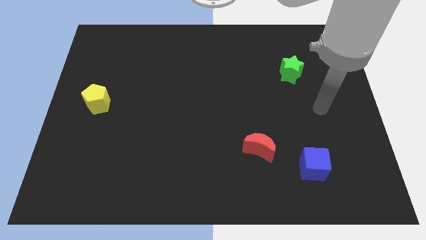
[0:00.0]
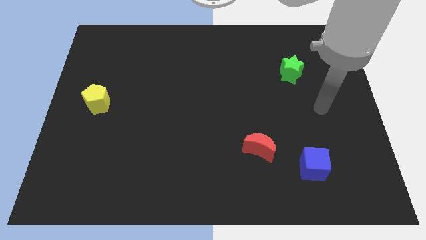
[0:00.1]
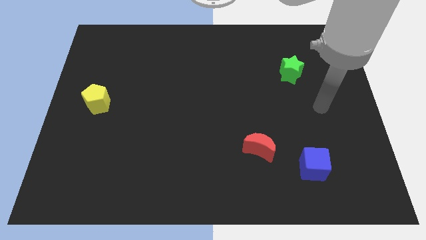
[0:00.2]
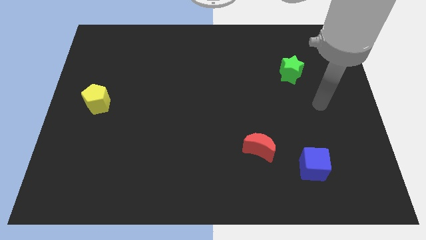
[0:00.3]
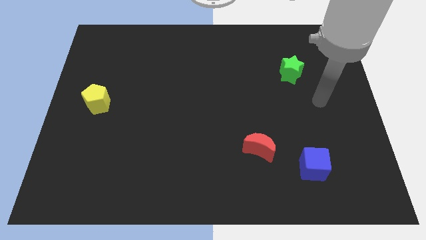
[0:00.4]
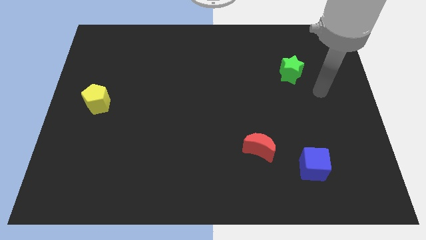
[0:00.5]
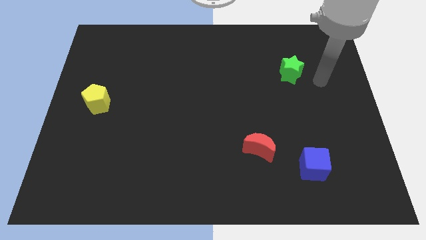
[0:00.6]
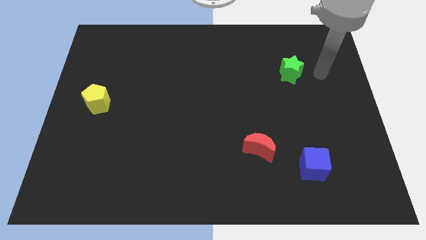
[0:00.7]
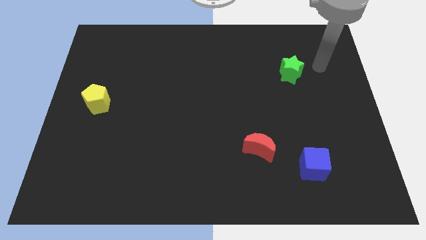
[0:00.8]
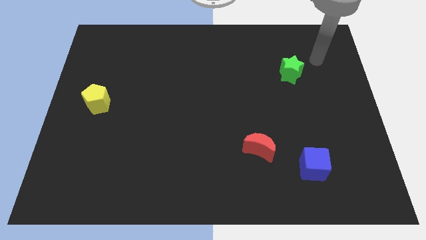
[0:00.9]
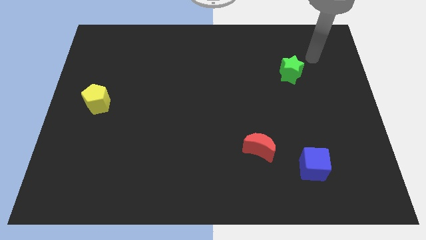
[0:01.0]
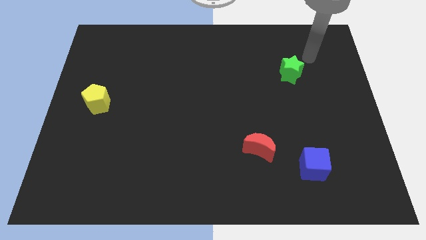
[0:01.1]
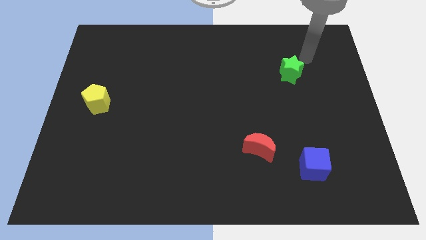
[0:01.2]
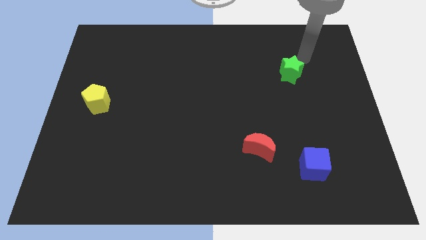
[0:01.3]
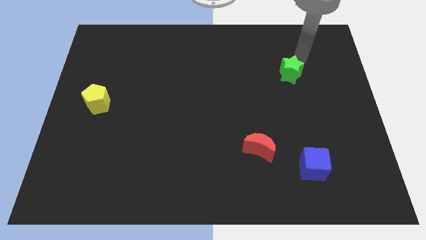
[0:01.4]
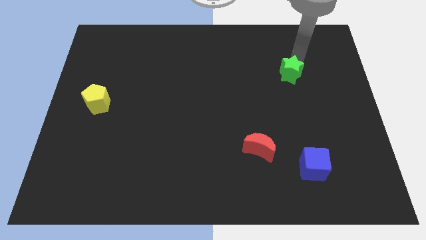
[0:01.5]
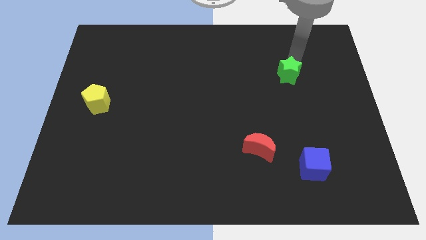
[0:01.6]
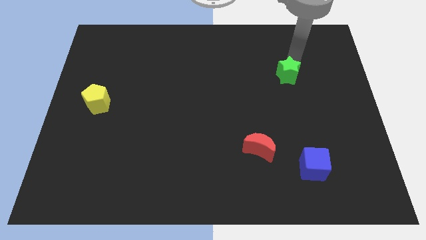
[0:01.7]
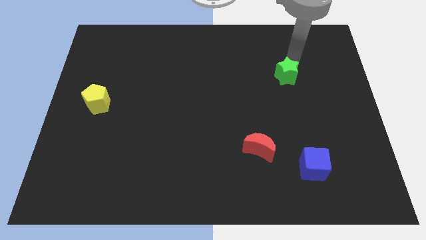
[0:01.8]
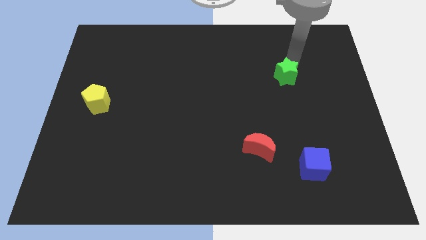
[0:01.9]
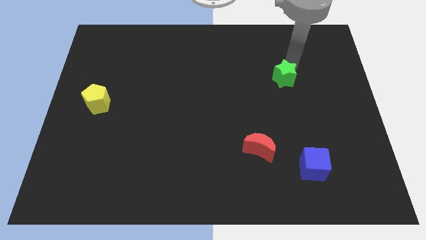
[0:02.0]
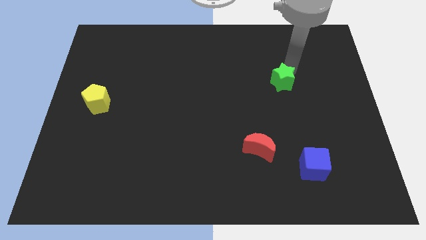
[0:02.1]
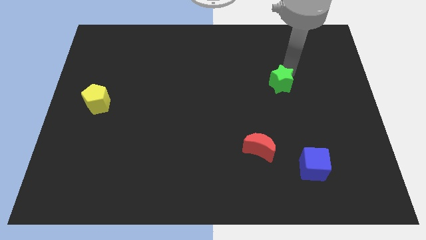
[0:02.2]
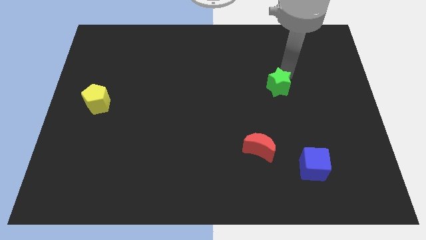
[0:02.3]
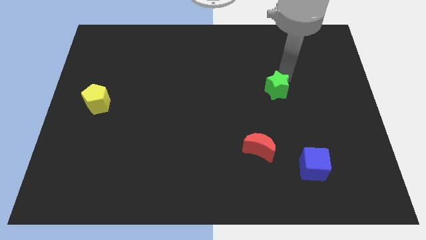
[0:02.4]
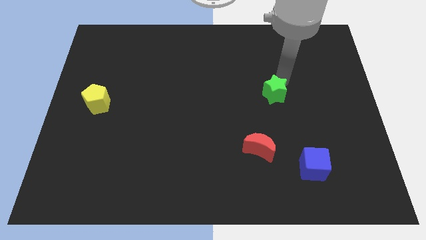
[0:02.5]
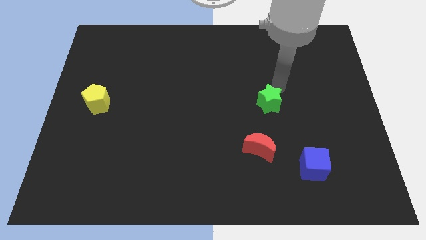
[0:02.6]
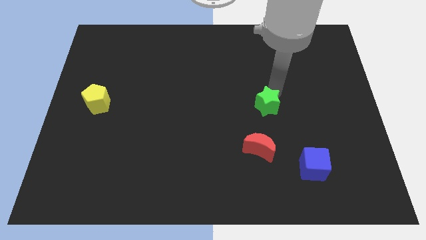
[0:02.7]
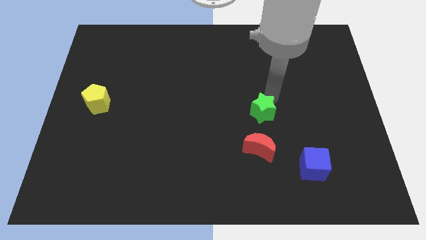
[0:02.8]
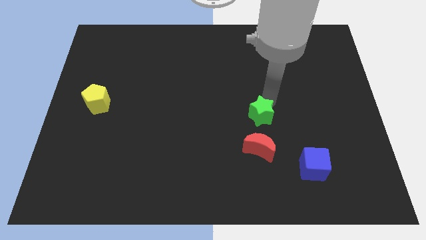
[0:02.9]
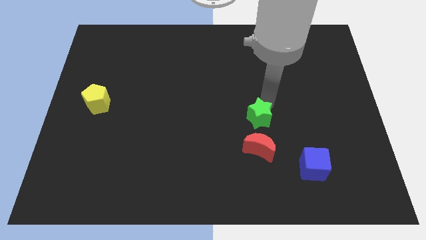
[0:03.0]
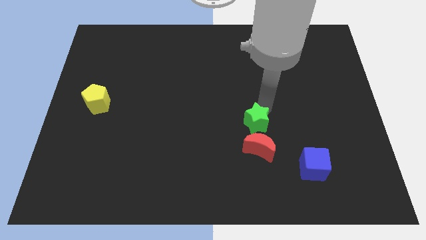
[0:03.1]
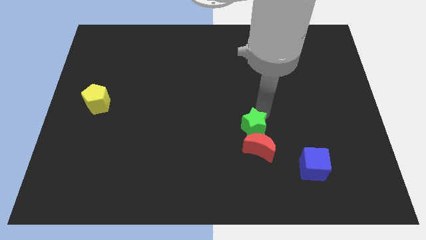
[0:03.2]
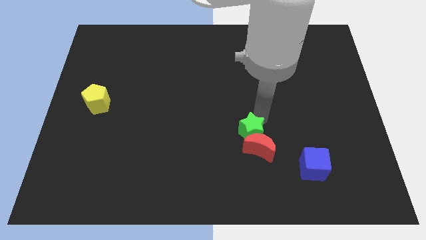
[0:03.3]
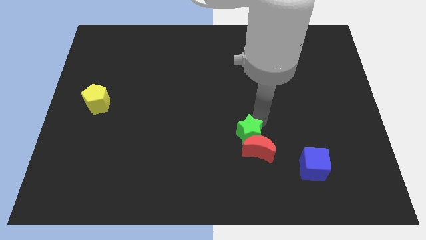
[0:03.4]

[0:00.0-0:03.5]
slide the star next to the red block

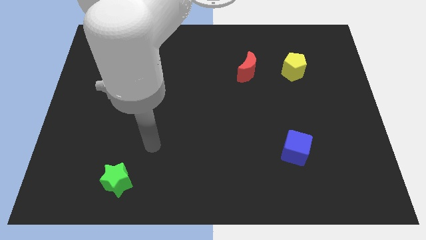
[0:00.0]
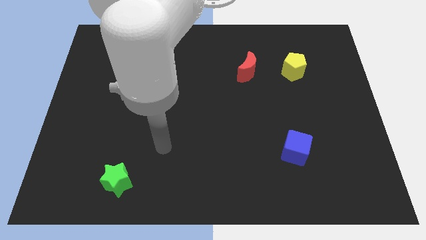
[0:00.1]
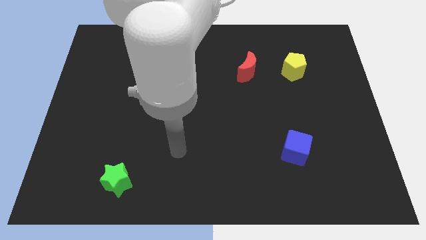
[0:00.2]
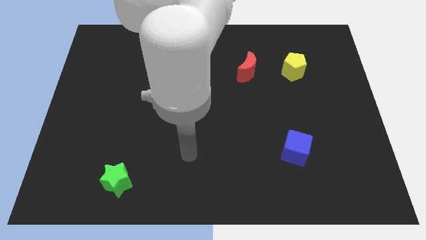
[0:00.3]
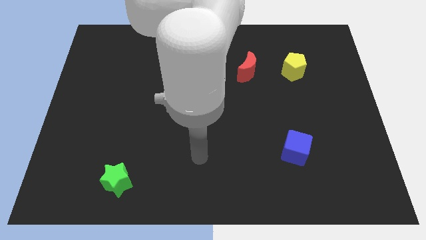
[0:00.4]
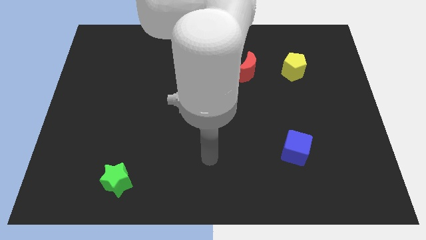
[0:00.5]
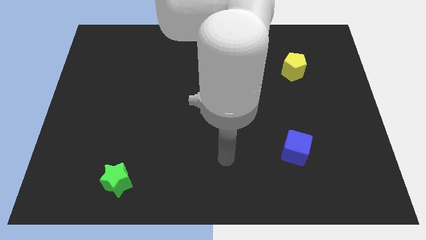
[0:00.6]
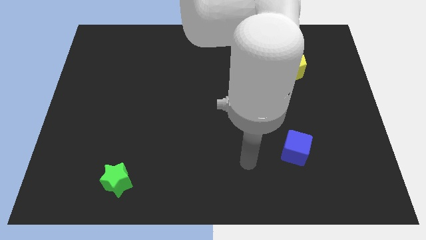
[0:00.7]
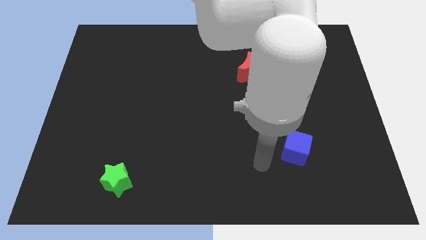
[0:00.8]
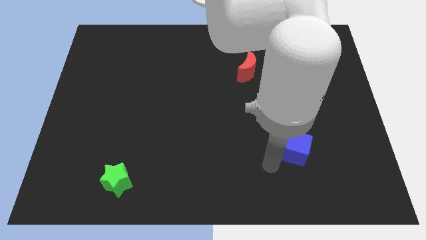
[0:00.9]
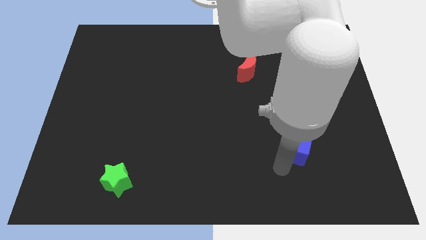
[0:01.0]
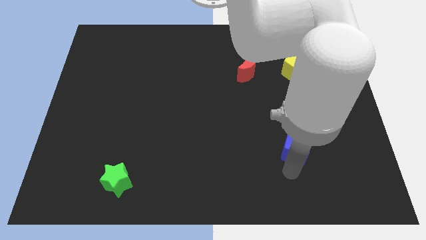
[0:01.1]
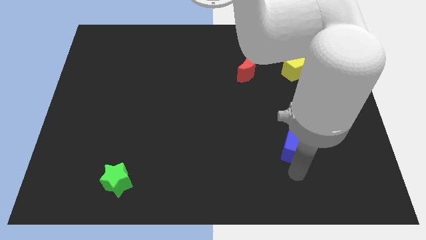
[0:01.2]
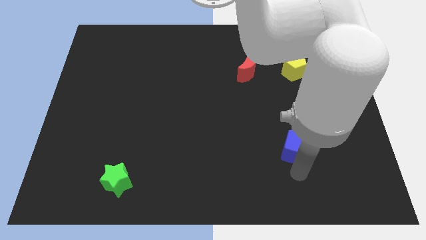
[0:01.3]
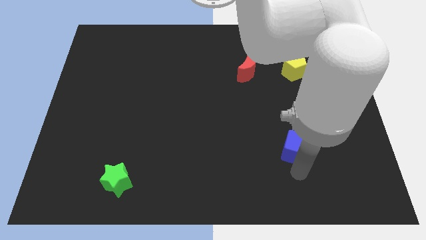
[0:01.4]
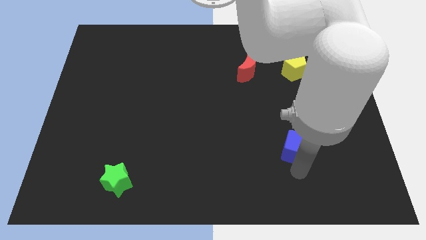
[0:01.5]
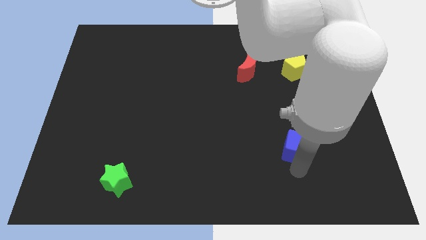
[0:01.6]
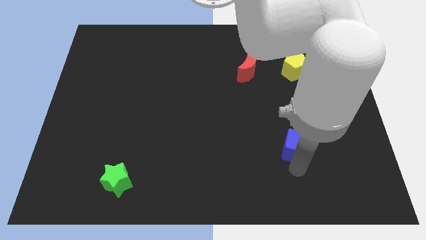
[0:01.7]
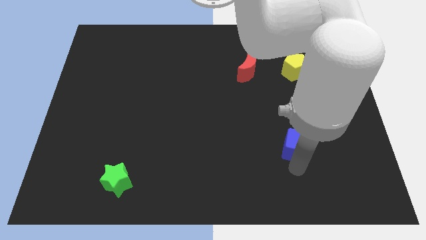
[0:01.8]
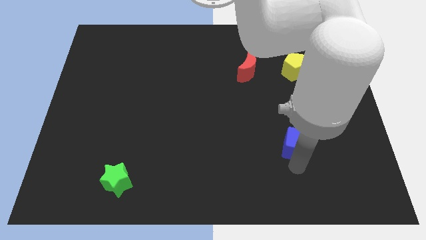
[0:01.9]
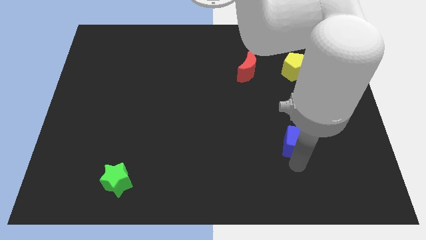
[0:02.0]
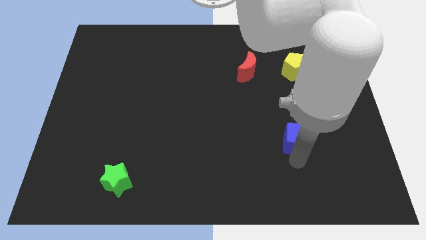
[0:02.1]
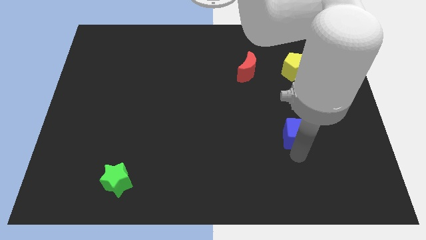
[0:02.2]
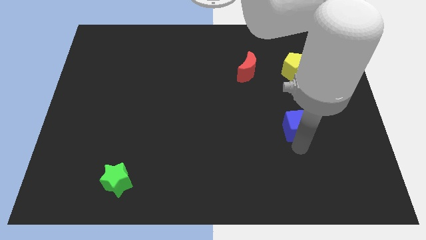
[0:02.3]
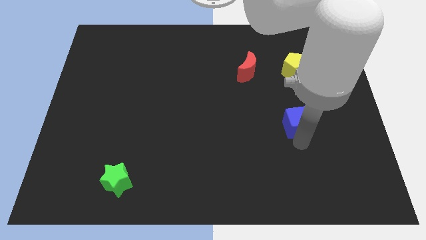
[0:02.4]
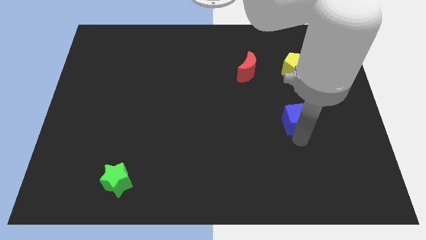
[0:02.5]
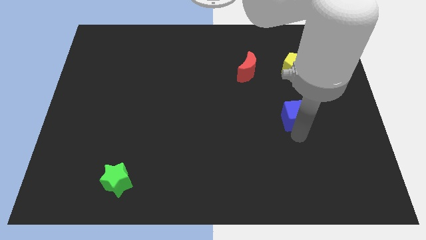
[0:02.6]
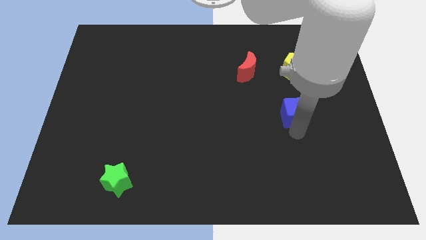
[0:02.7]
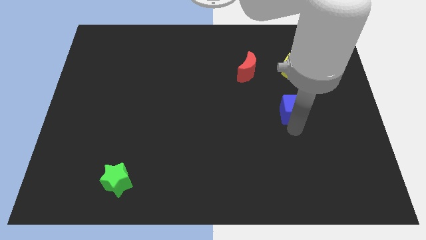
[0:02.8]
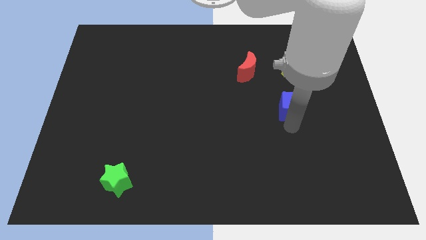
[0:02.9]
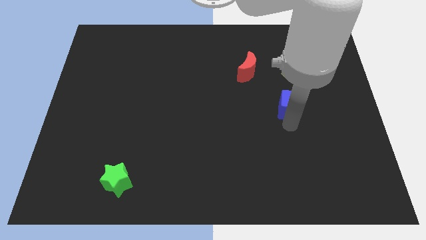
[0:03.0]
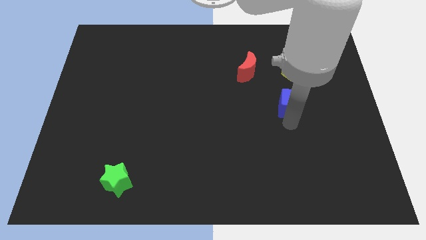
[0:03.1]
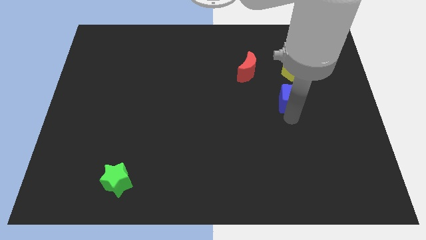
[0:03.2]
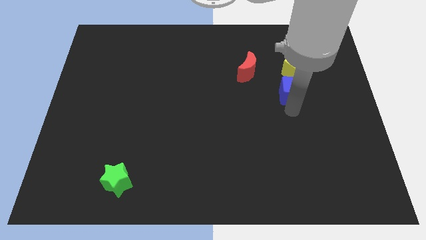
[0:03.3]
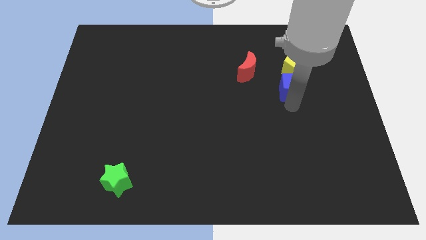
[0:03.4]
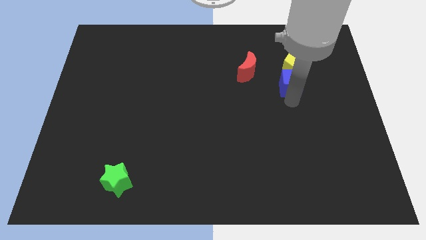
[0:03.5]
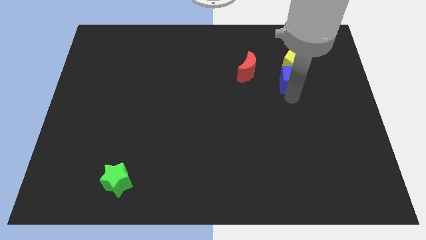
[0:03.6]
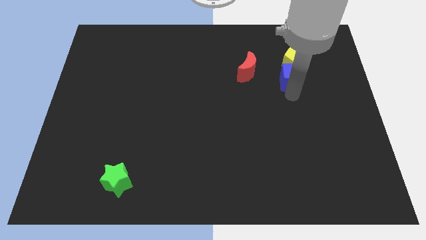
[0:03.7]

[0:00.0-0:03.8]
push the blue block next to the yellow block

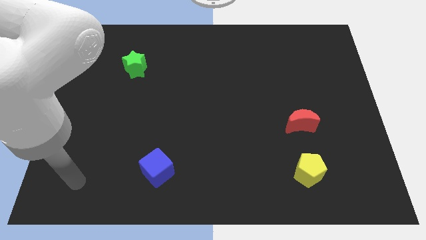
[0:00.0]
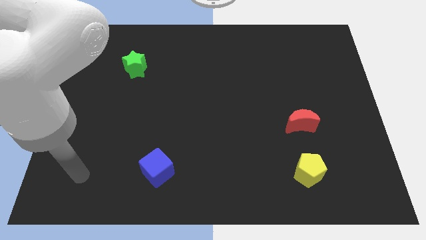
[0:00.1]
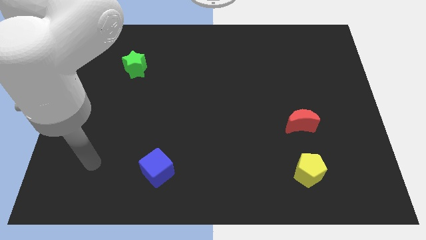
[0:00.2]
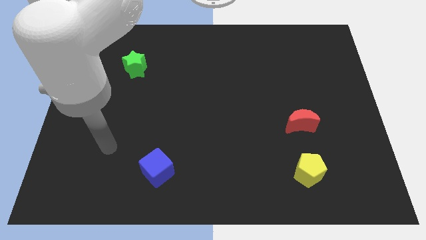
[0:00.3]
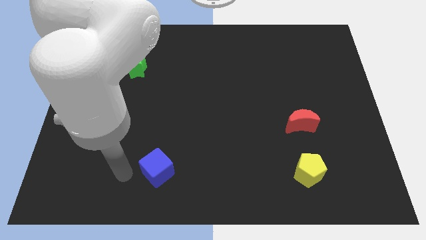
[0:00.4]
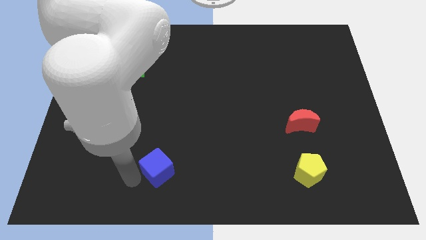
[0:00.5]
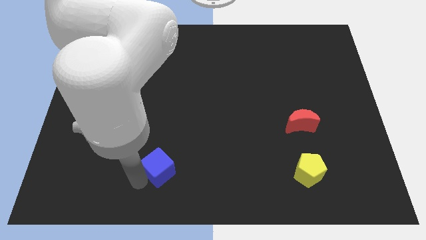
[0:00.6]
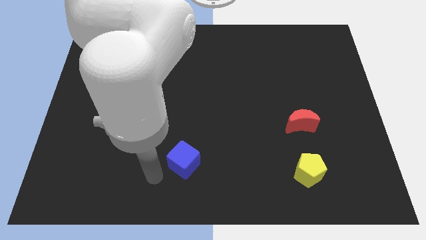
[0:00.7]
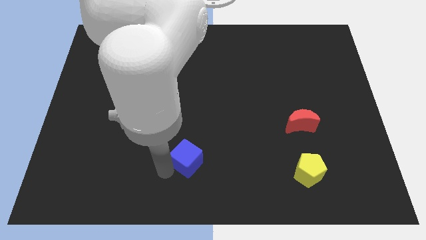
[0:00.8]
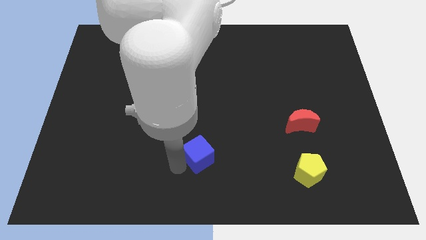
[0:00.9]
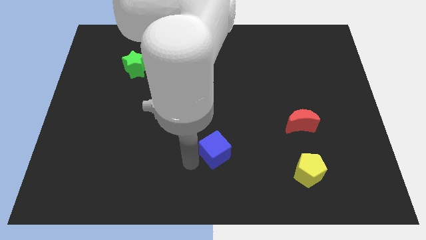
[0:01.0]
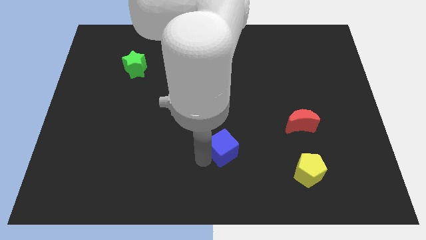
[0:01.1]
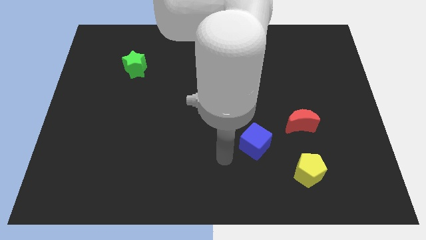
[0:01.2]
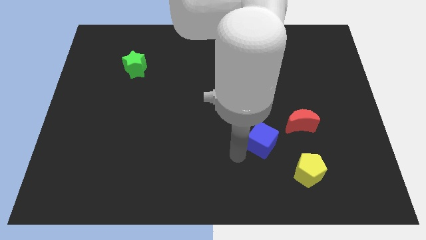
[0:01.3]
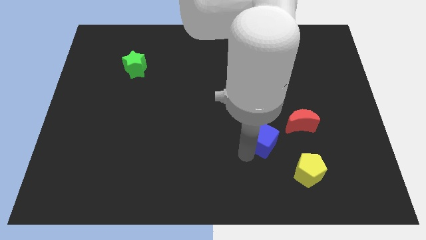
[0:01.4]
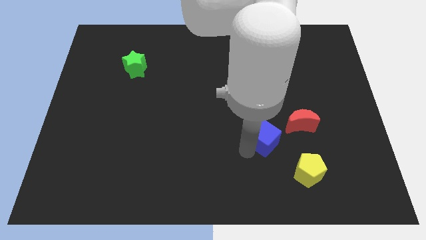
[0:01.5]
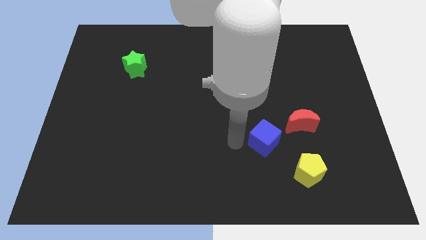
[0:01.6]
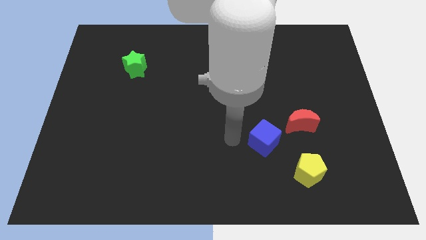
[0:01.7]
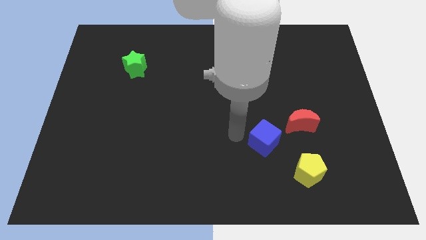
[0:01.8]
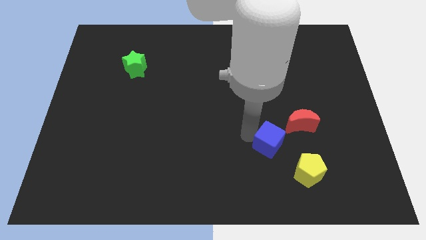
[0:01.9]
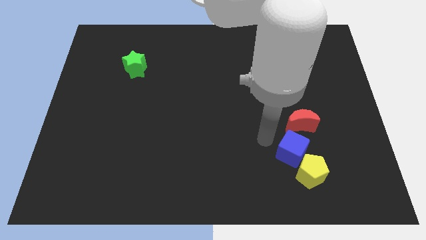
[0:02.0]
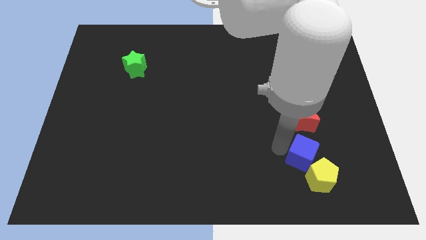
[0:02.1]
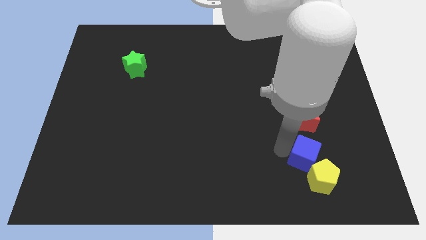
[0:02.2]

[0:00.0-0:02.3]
move the cube towards the pentagon
